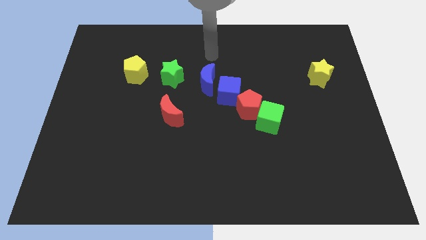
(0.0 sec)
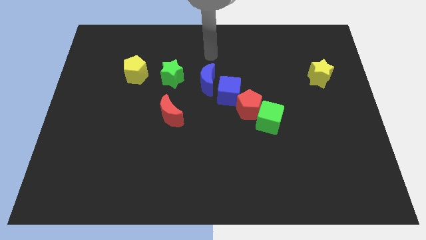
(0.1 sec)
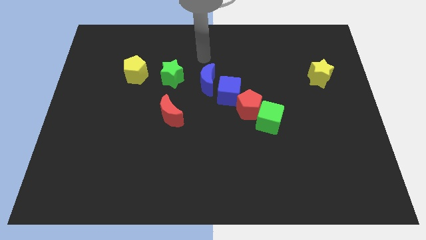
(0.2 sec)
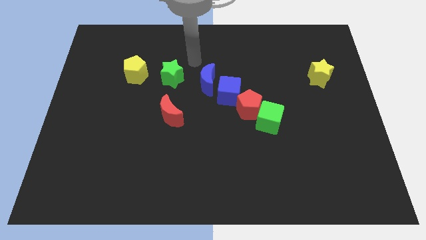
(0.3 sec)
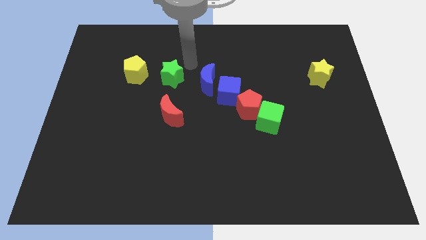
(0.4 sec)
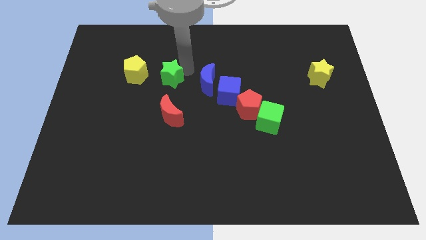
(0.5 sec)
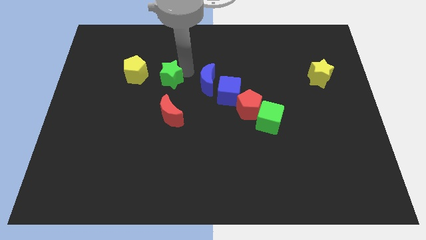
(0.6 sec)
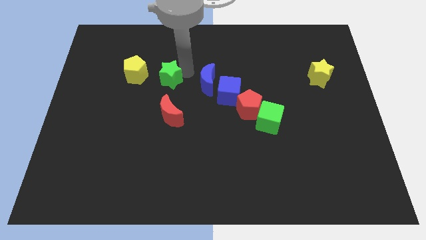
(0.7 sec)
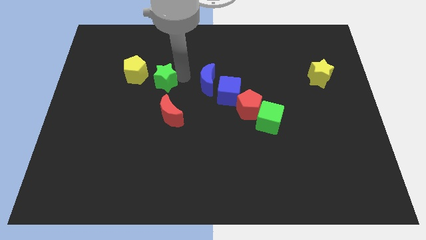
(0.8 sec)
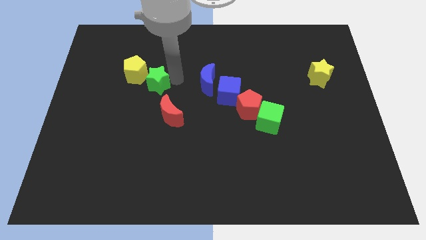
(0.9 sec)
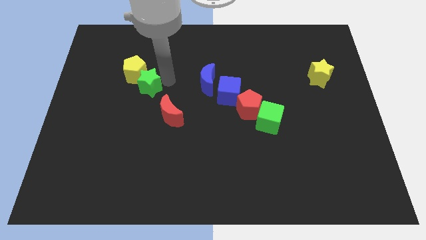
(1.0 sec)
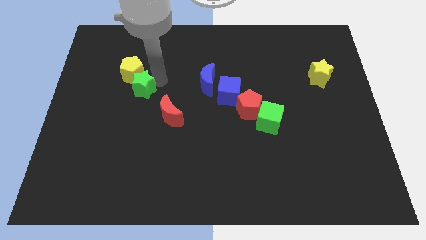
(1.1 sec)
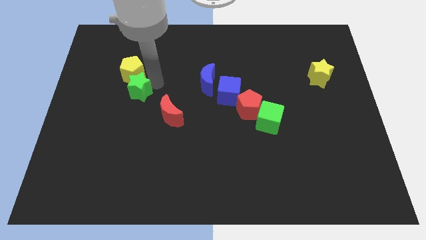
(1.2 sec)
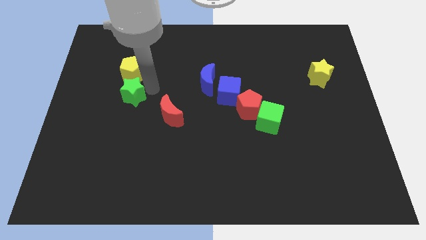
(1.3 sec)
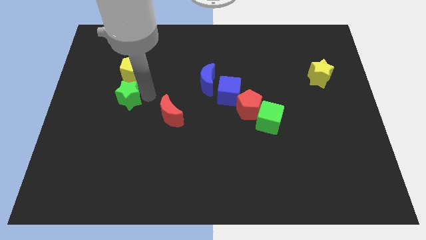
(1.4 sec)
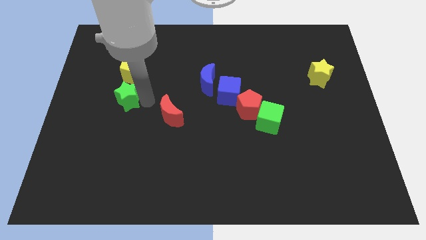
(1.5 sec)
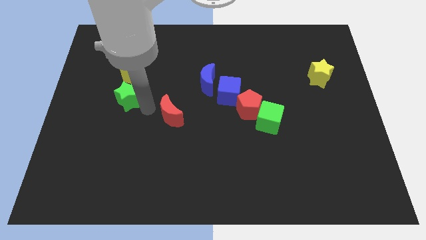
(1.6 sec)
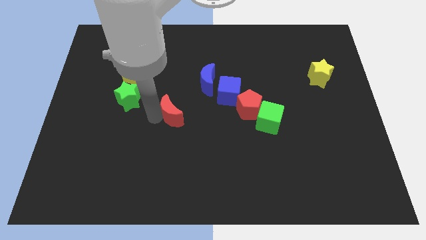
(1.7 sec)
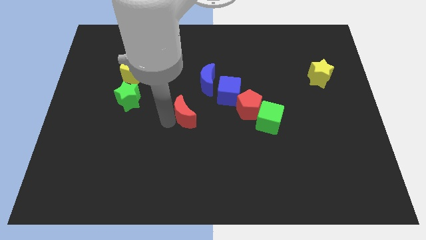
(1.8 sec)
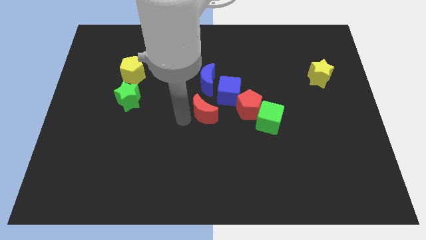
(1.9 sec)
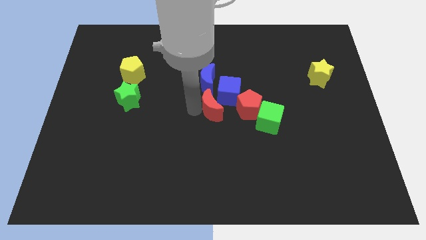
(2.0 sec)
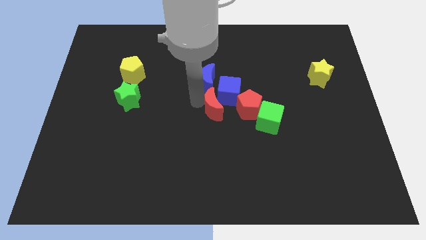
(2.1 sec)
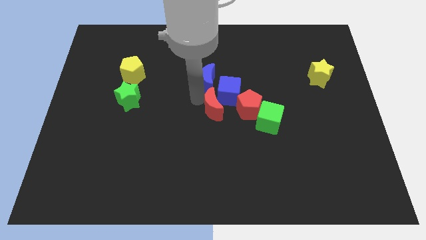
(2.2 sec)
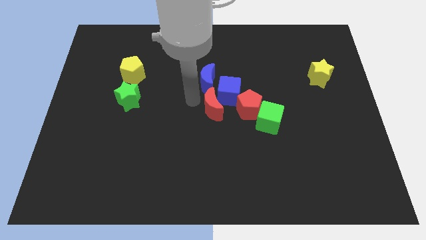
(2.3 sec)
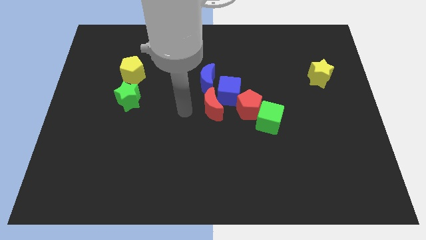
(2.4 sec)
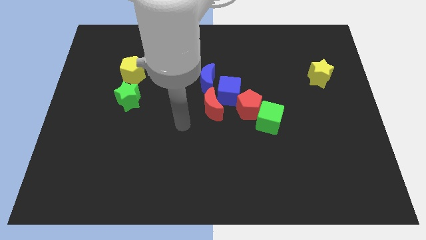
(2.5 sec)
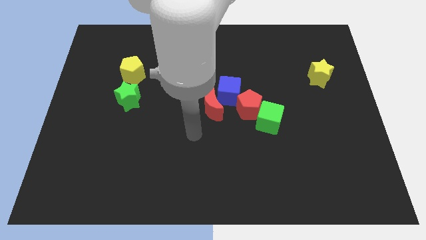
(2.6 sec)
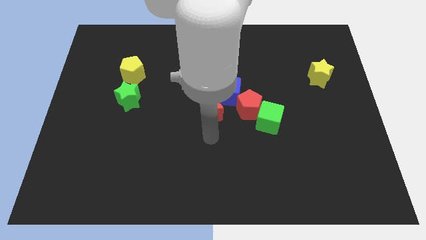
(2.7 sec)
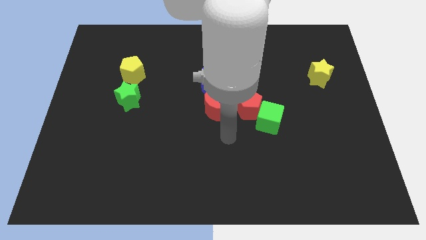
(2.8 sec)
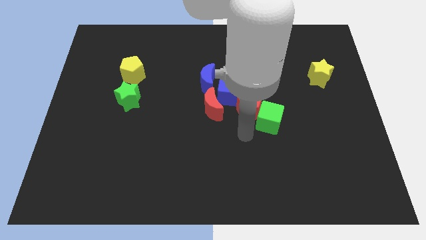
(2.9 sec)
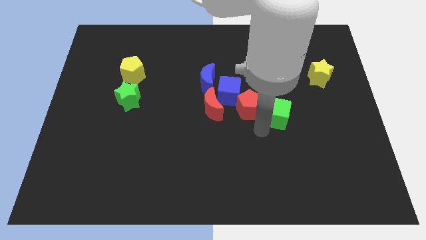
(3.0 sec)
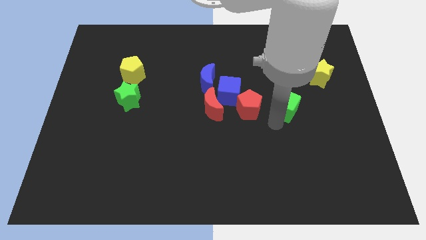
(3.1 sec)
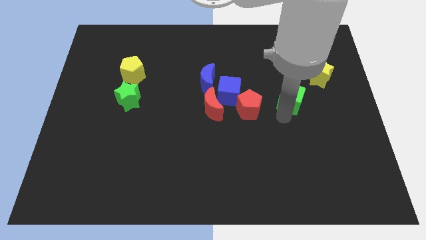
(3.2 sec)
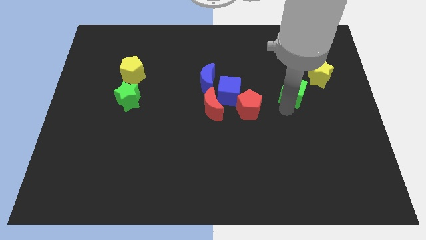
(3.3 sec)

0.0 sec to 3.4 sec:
push the green star red crescent and green cube

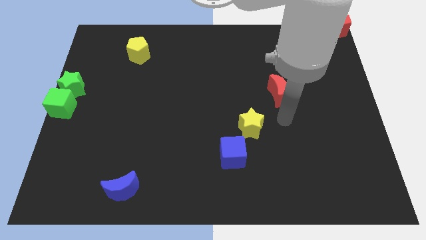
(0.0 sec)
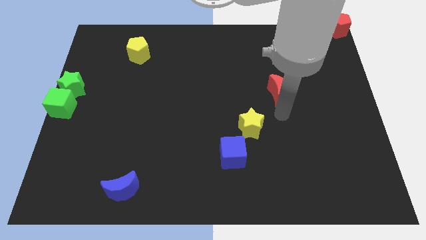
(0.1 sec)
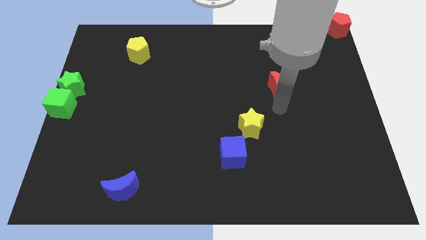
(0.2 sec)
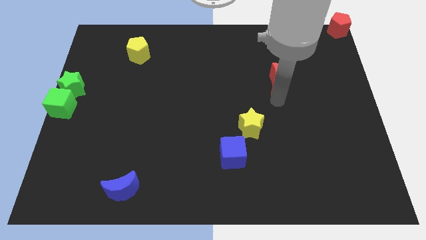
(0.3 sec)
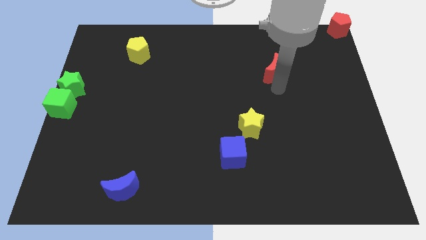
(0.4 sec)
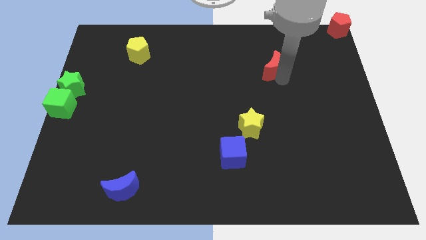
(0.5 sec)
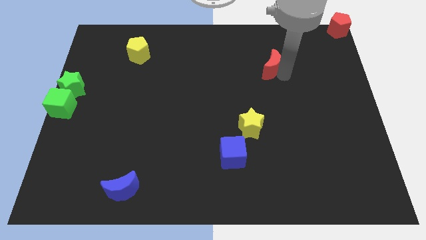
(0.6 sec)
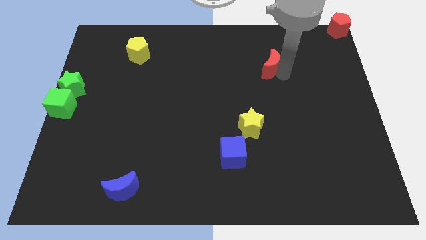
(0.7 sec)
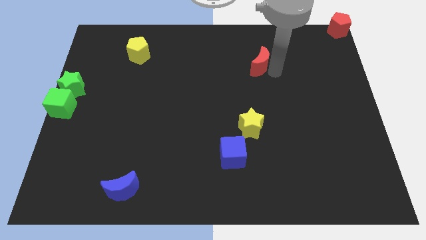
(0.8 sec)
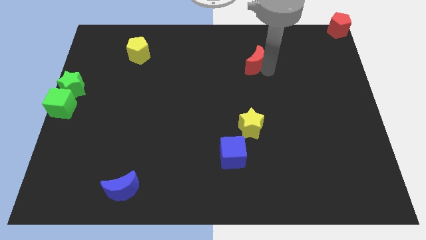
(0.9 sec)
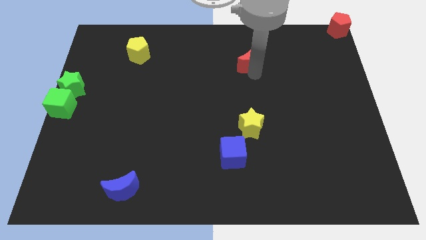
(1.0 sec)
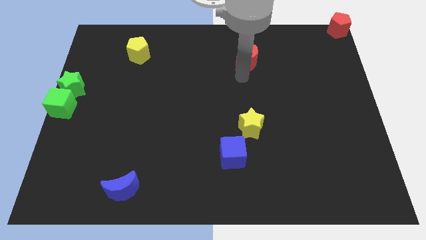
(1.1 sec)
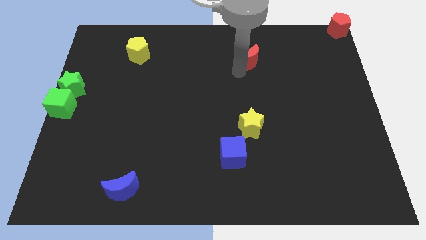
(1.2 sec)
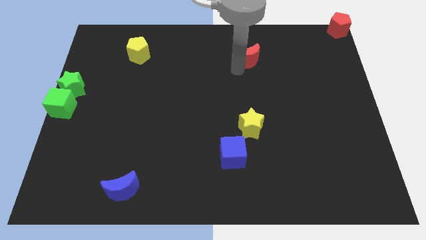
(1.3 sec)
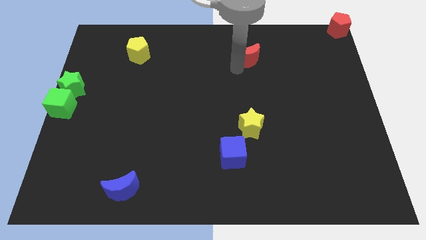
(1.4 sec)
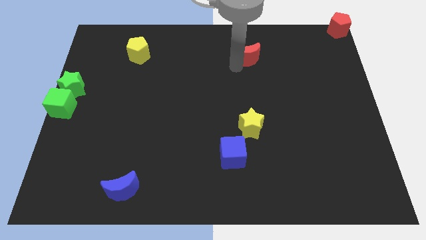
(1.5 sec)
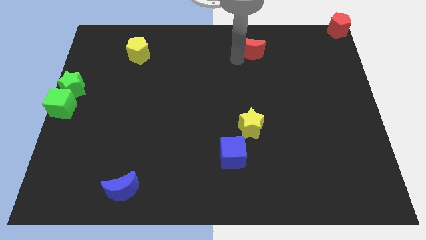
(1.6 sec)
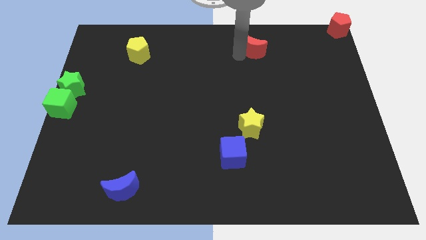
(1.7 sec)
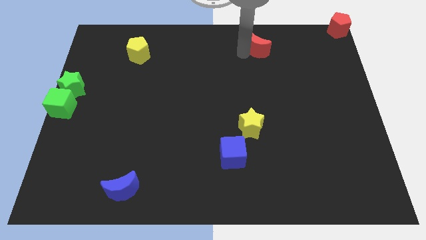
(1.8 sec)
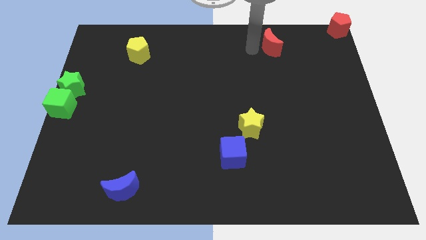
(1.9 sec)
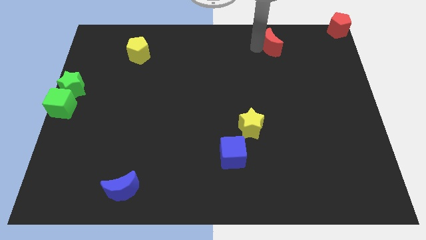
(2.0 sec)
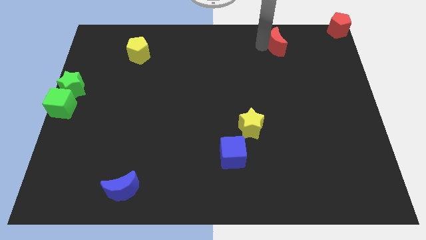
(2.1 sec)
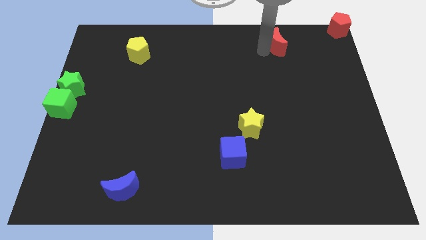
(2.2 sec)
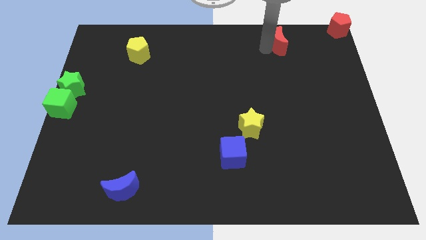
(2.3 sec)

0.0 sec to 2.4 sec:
push the red crescent towards the left of the red pentagon

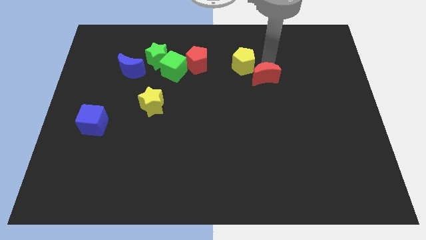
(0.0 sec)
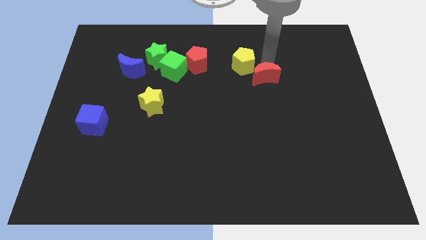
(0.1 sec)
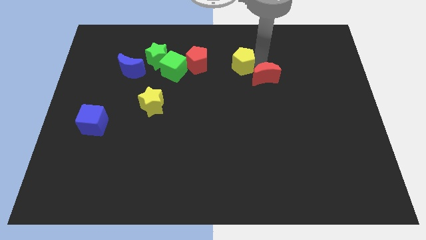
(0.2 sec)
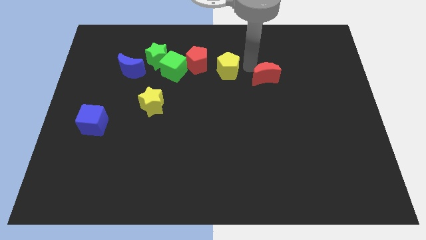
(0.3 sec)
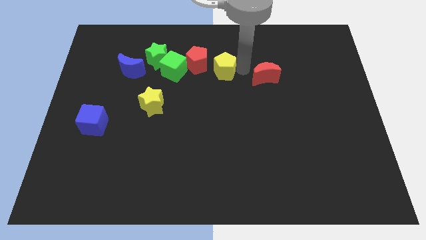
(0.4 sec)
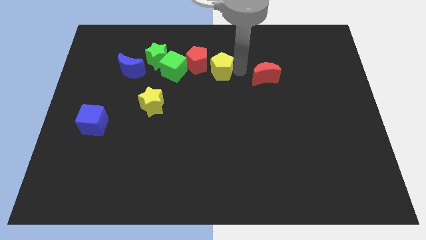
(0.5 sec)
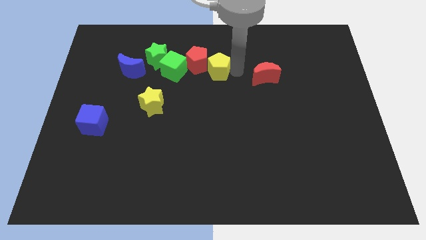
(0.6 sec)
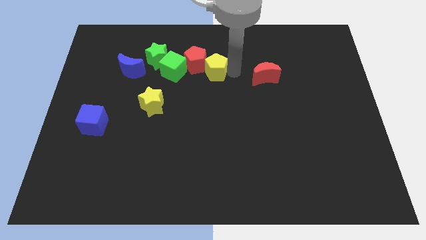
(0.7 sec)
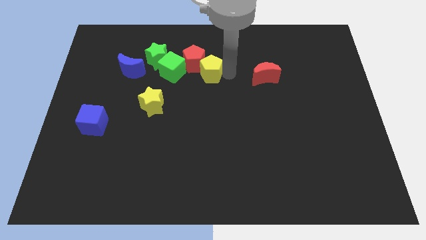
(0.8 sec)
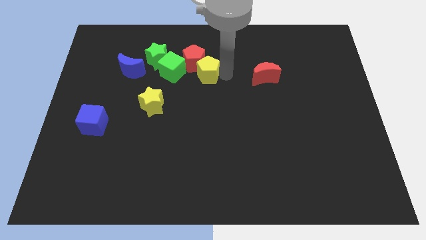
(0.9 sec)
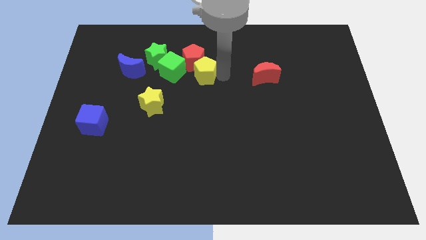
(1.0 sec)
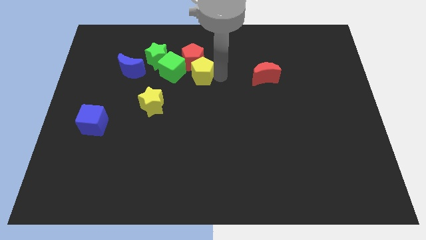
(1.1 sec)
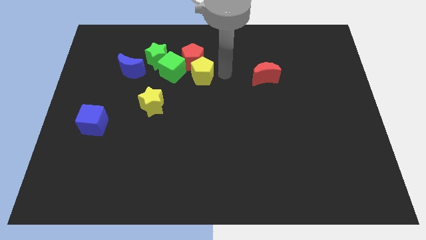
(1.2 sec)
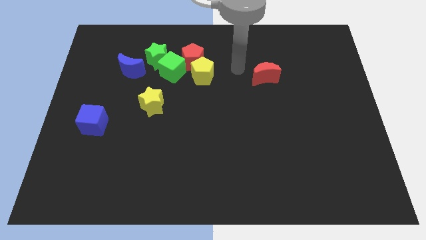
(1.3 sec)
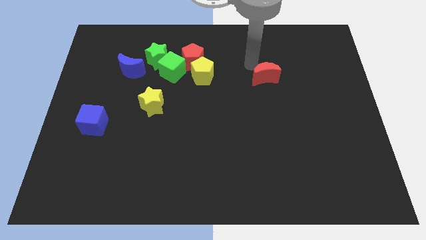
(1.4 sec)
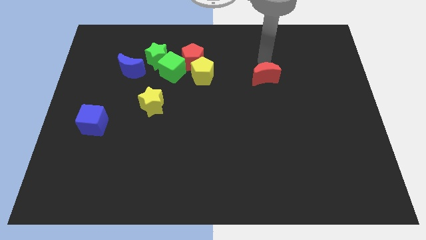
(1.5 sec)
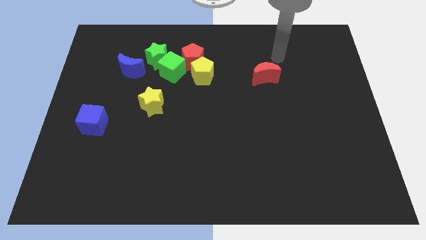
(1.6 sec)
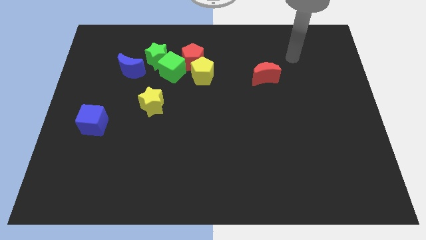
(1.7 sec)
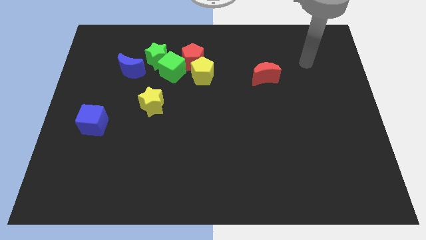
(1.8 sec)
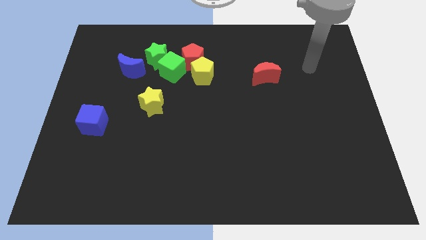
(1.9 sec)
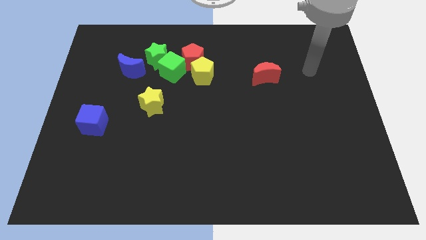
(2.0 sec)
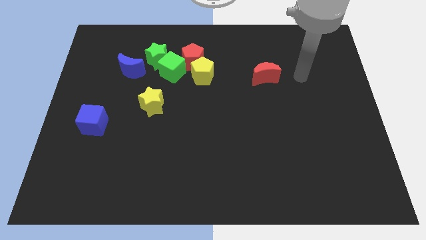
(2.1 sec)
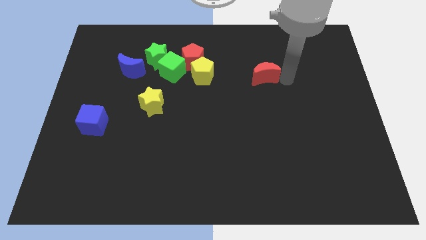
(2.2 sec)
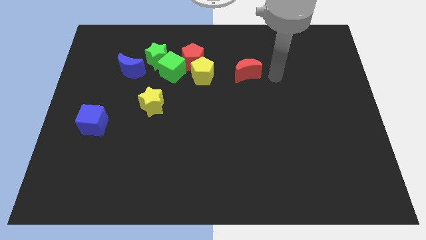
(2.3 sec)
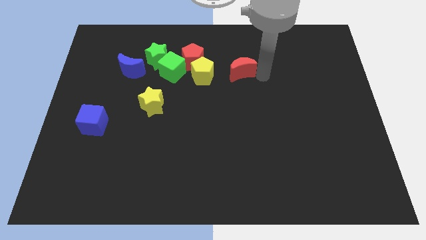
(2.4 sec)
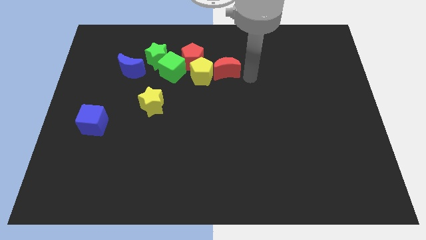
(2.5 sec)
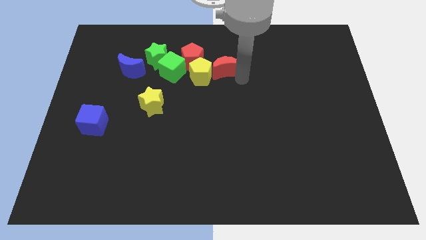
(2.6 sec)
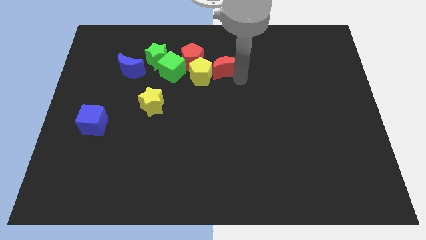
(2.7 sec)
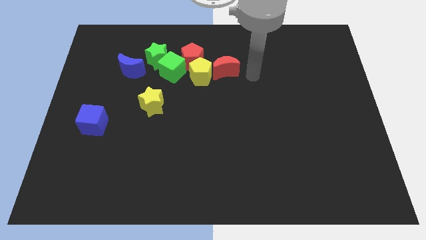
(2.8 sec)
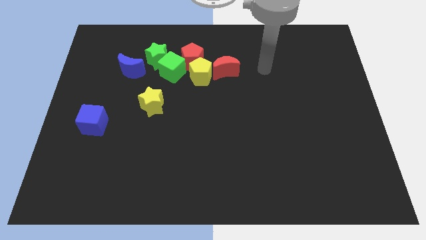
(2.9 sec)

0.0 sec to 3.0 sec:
pus red moon into red moon

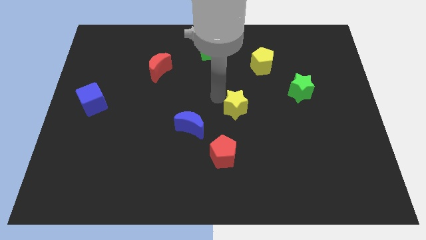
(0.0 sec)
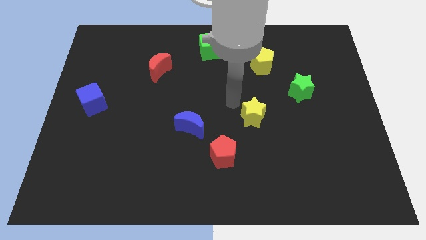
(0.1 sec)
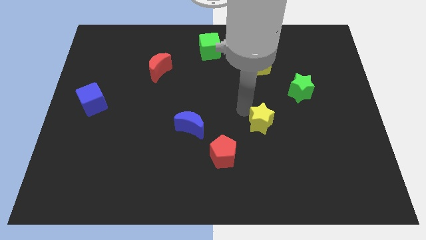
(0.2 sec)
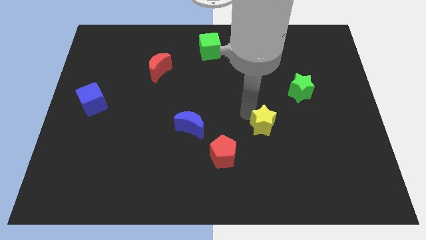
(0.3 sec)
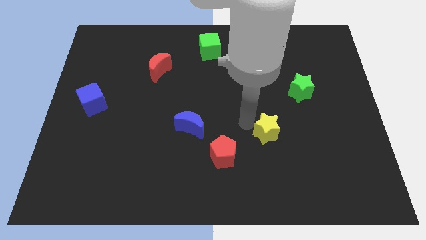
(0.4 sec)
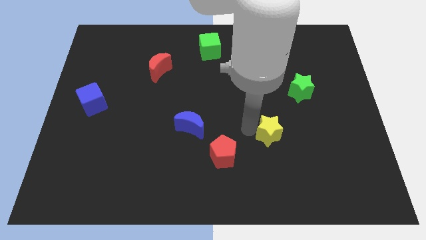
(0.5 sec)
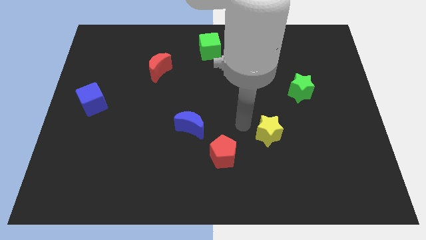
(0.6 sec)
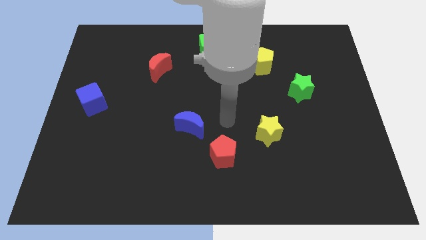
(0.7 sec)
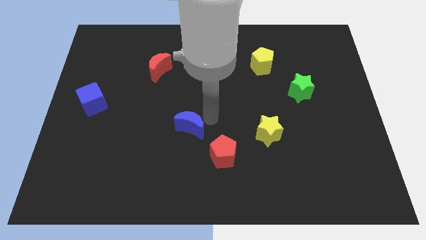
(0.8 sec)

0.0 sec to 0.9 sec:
push the yellow star to the bottom of the board
